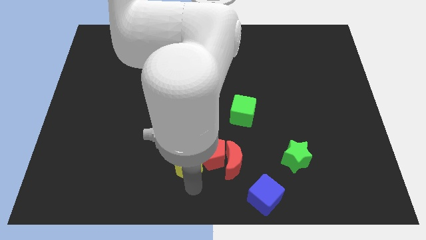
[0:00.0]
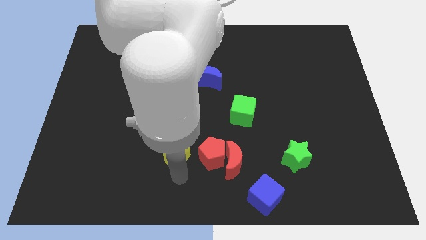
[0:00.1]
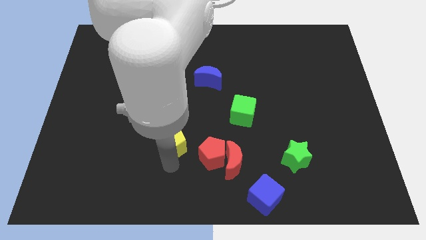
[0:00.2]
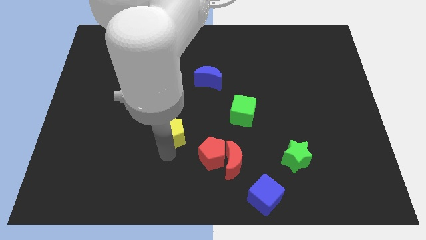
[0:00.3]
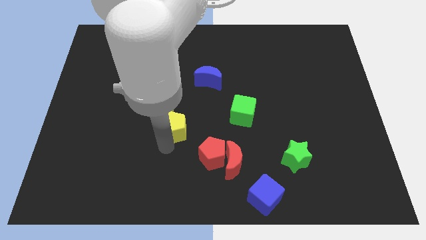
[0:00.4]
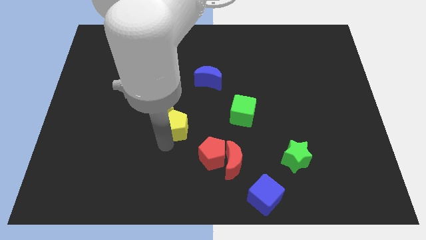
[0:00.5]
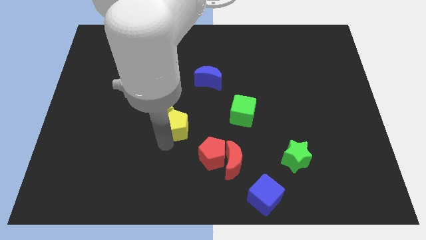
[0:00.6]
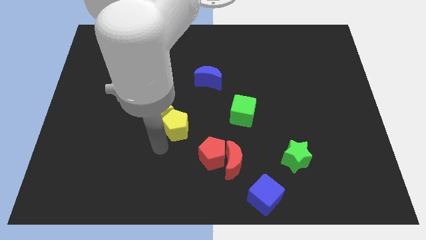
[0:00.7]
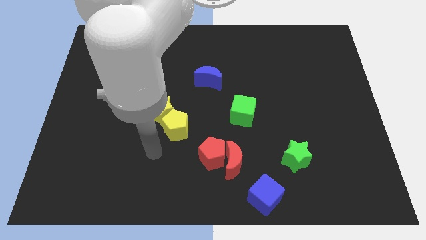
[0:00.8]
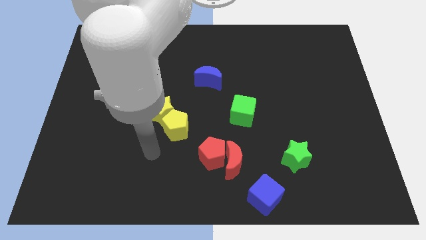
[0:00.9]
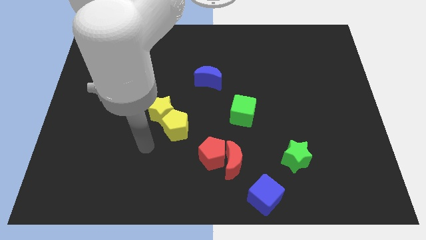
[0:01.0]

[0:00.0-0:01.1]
place yellow pentagon near yellow star

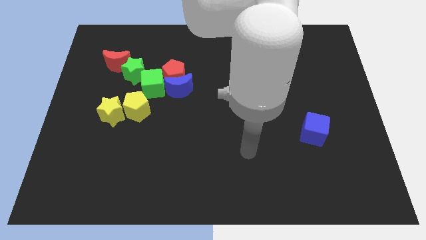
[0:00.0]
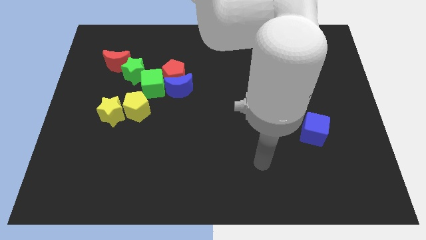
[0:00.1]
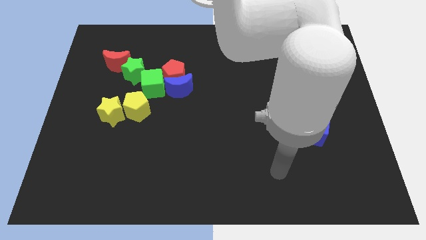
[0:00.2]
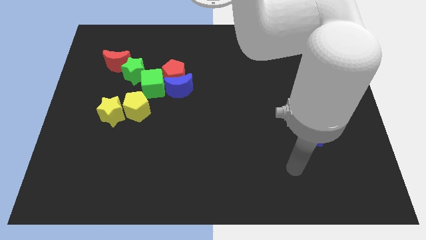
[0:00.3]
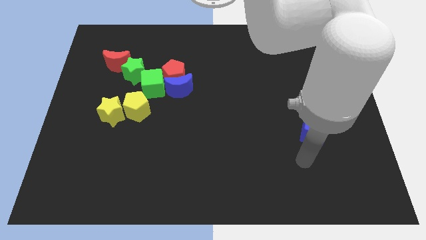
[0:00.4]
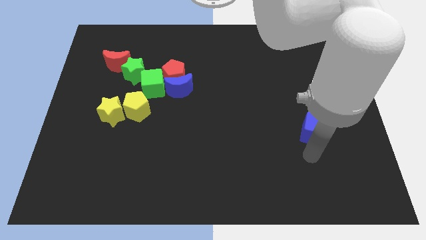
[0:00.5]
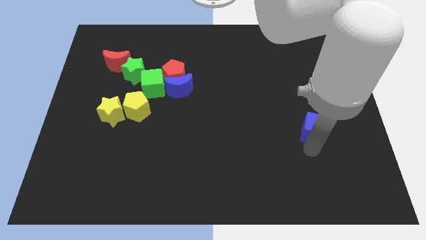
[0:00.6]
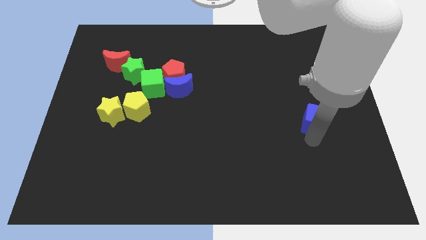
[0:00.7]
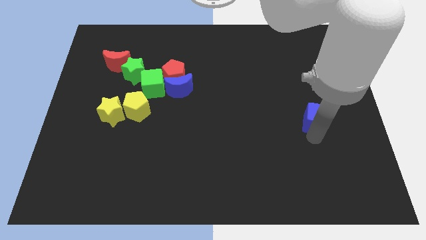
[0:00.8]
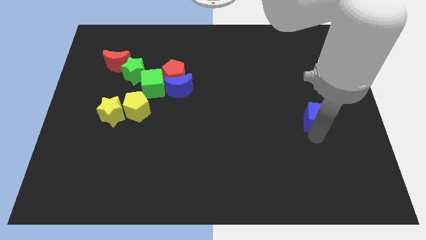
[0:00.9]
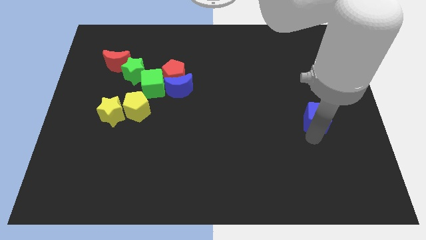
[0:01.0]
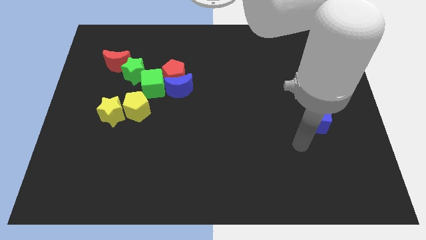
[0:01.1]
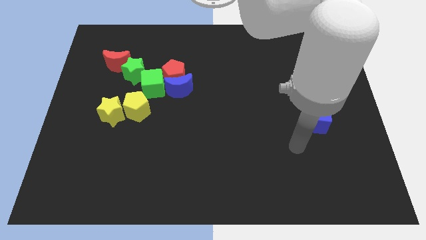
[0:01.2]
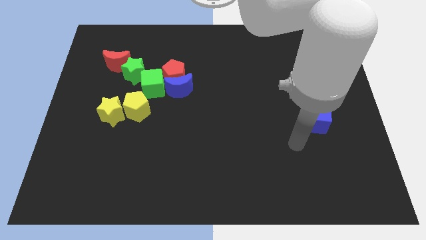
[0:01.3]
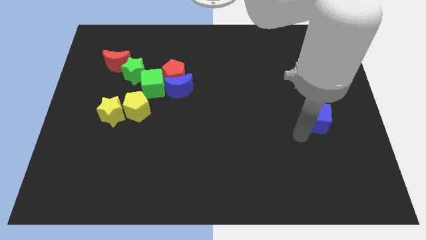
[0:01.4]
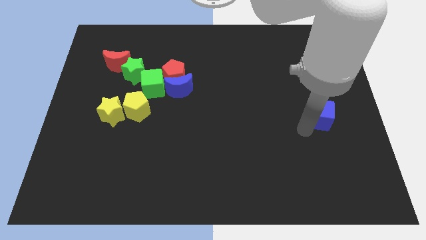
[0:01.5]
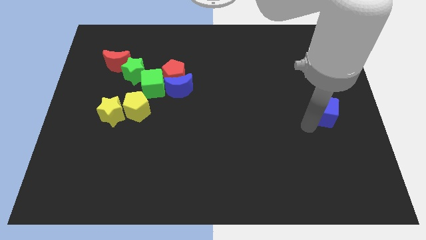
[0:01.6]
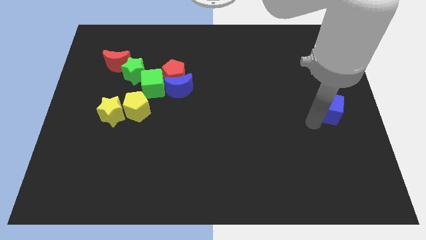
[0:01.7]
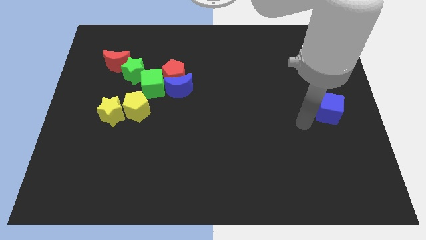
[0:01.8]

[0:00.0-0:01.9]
push the blue cube slightly to the right center of the board

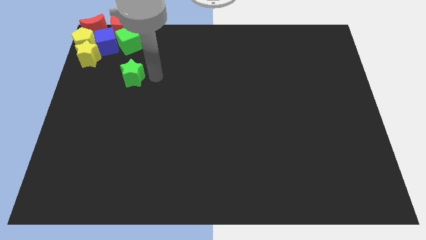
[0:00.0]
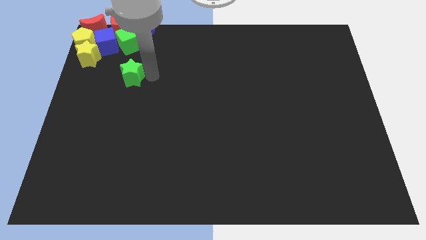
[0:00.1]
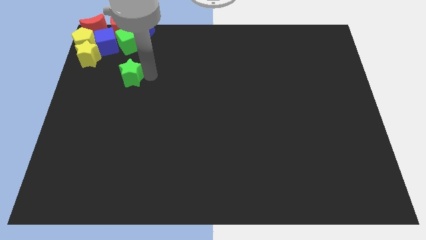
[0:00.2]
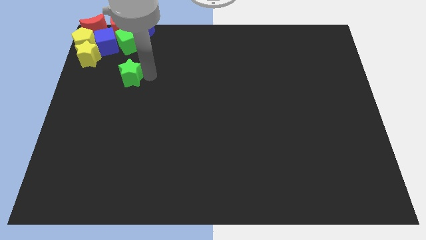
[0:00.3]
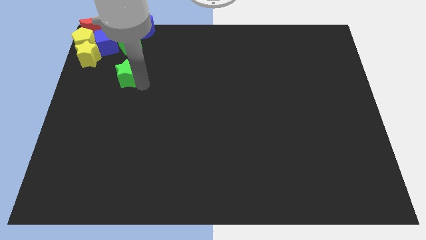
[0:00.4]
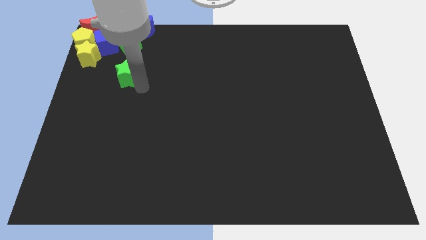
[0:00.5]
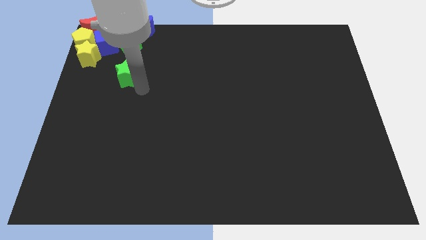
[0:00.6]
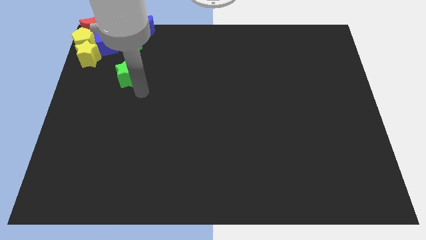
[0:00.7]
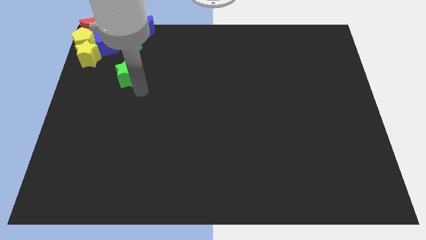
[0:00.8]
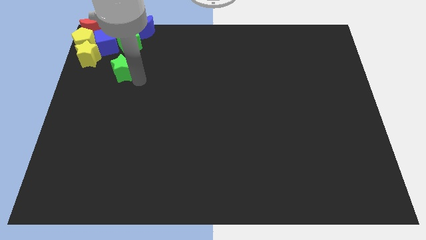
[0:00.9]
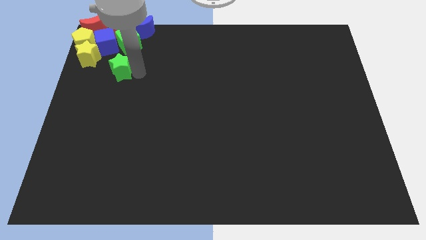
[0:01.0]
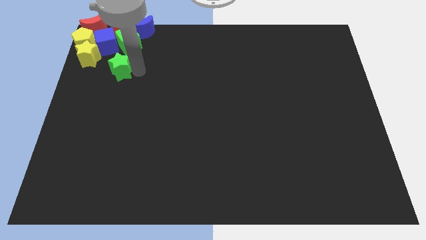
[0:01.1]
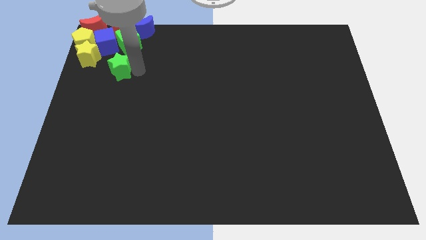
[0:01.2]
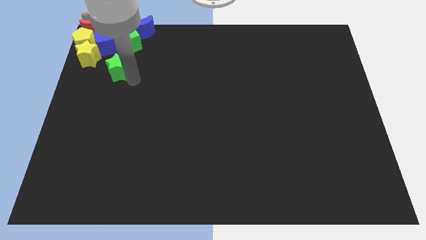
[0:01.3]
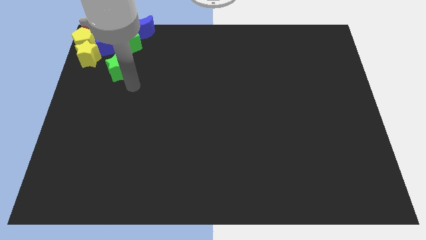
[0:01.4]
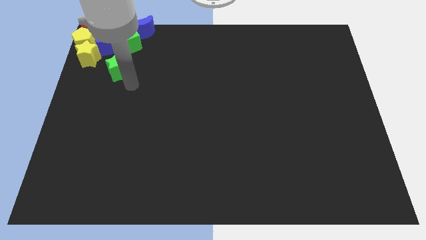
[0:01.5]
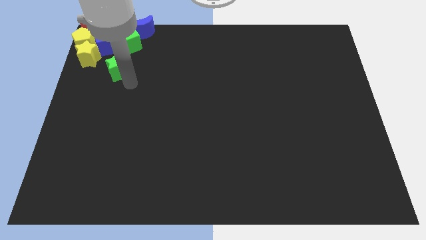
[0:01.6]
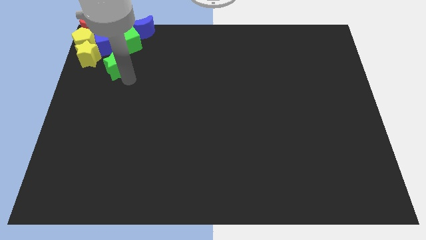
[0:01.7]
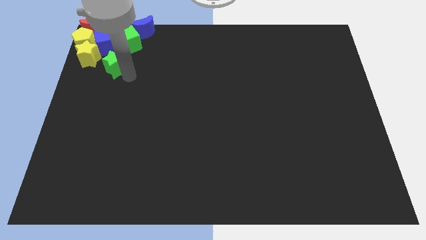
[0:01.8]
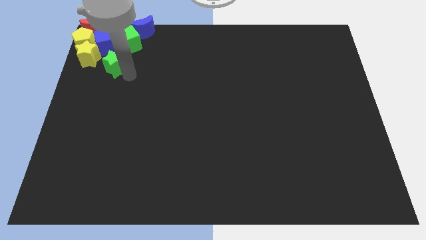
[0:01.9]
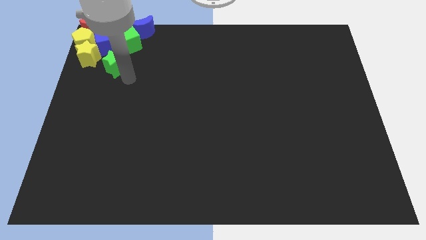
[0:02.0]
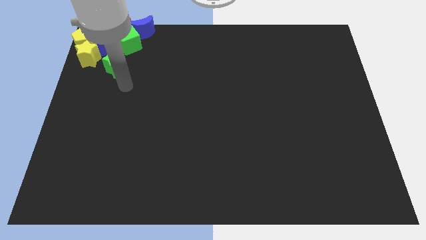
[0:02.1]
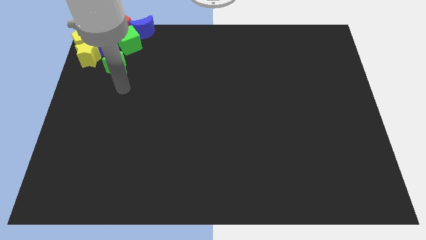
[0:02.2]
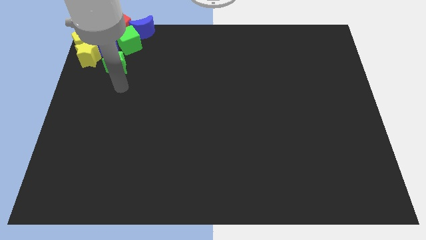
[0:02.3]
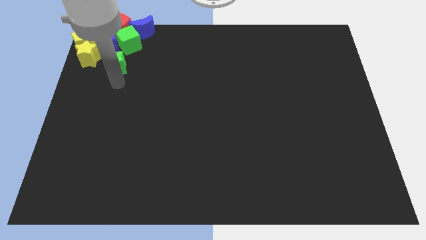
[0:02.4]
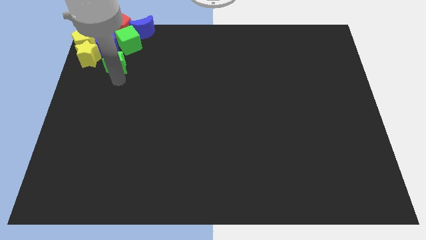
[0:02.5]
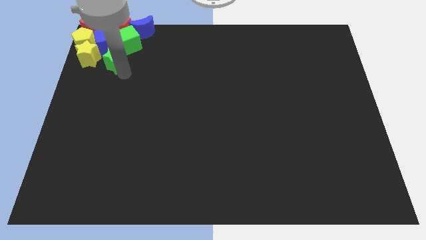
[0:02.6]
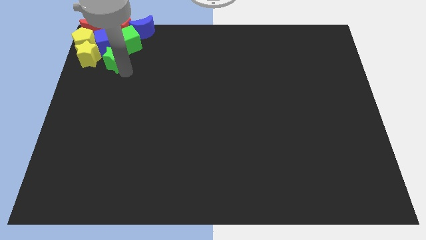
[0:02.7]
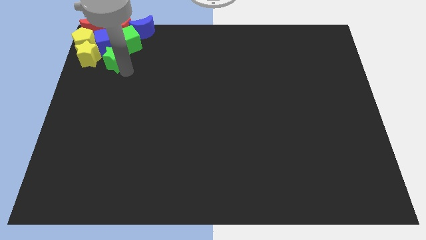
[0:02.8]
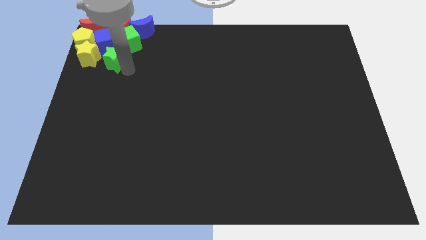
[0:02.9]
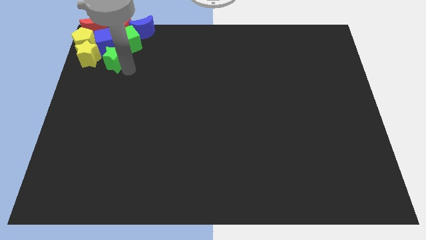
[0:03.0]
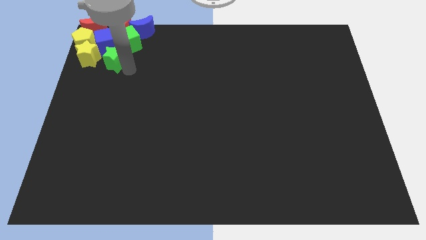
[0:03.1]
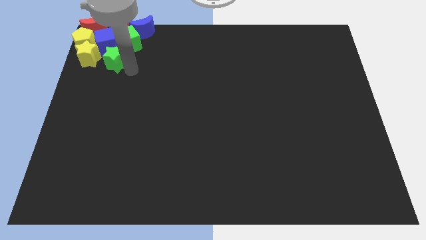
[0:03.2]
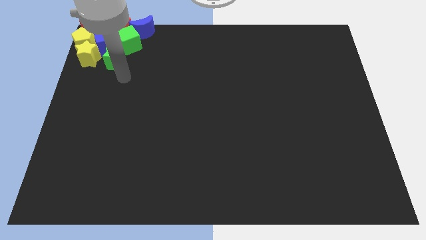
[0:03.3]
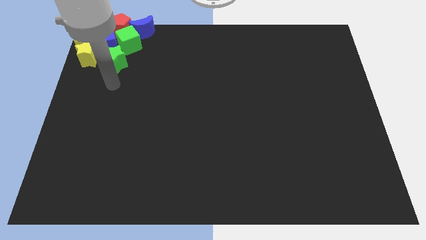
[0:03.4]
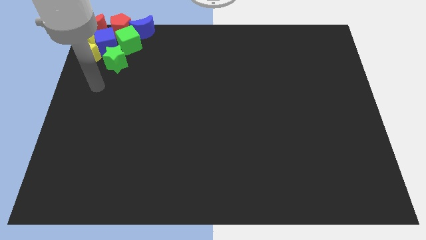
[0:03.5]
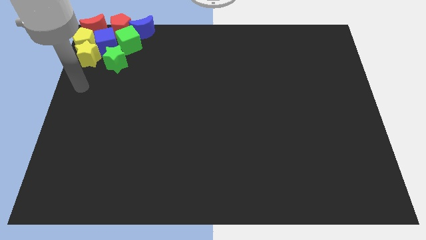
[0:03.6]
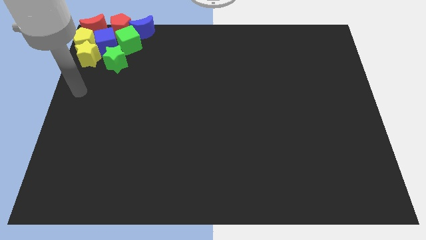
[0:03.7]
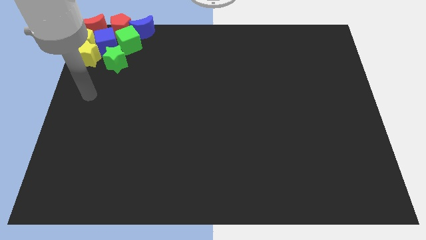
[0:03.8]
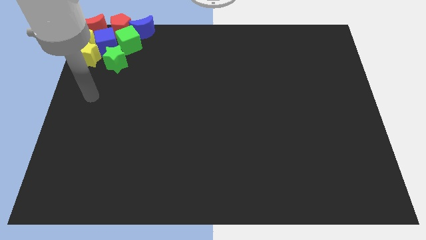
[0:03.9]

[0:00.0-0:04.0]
push the green star right to the yellow star

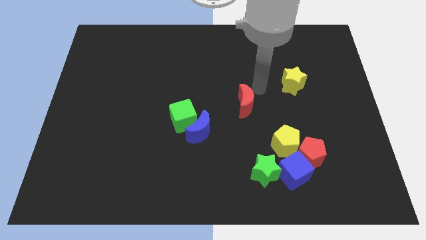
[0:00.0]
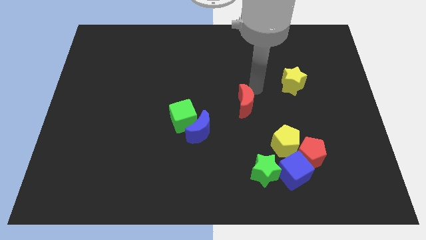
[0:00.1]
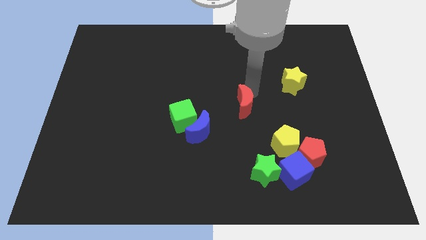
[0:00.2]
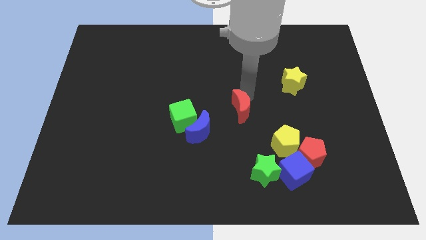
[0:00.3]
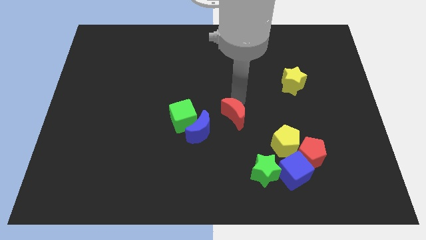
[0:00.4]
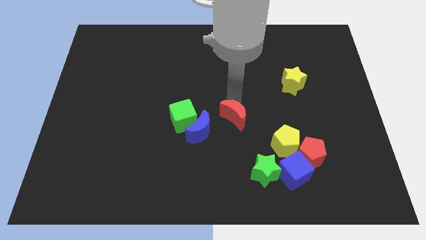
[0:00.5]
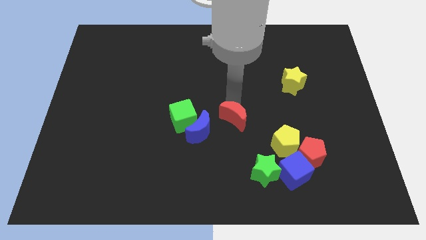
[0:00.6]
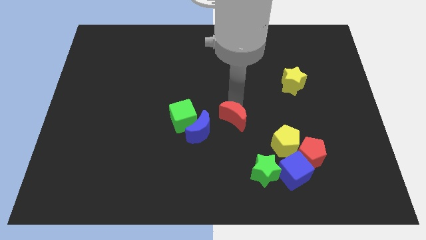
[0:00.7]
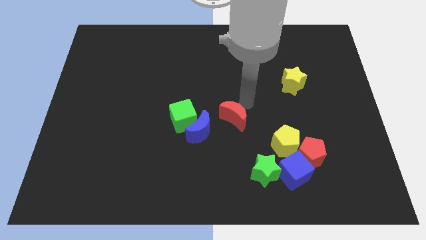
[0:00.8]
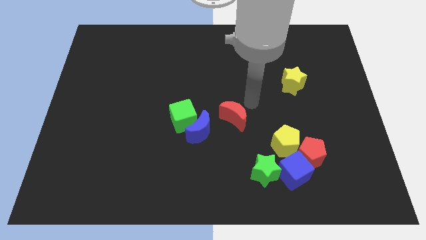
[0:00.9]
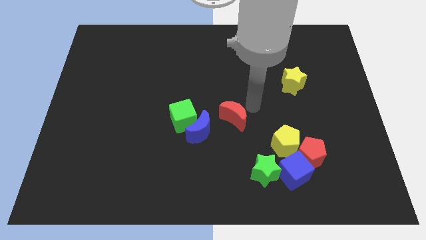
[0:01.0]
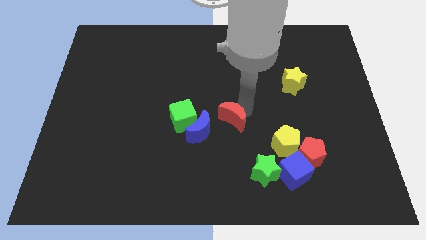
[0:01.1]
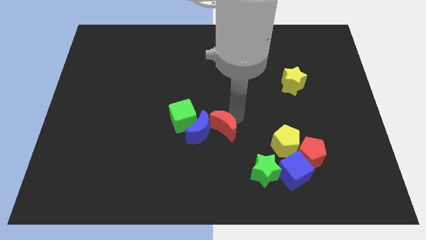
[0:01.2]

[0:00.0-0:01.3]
move the red crescent right to the blue crescent

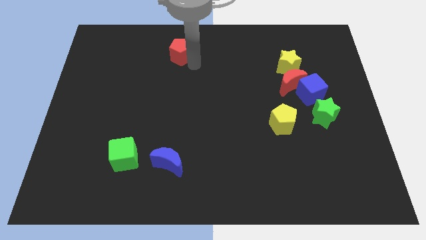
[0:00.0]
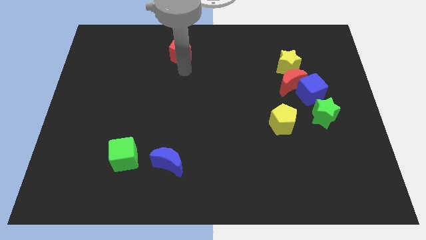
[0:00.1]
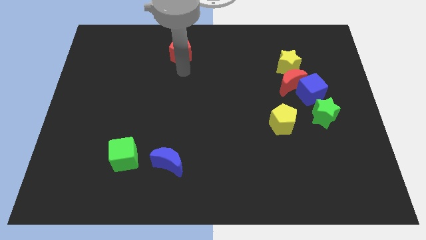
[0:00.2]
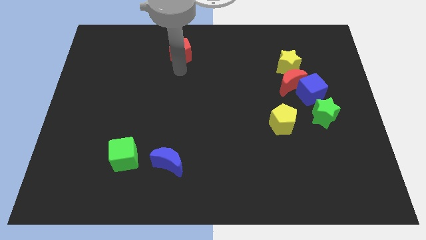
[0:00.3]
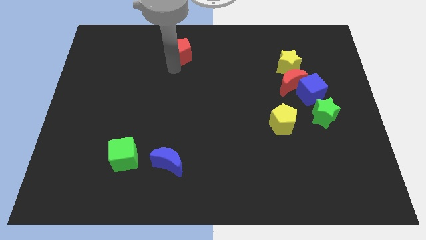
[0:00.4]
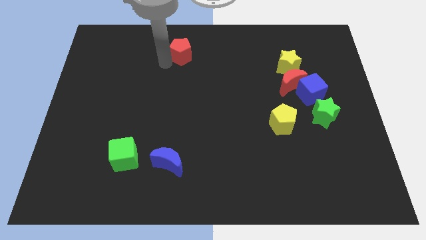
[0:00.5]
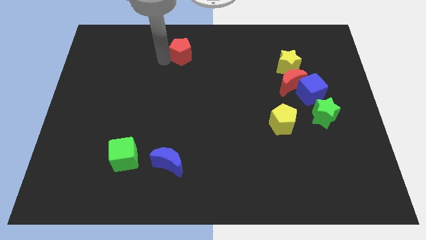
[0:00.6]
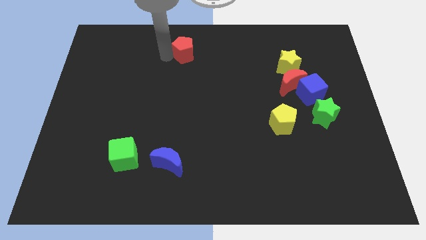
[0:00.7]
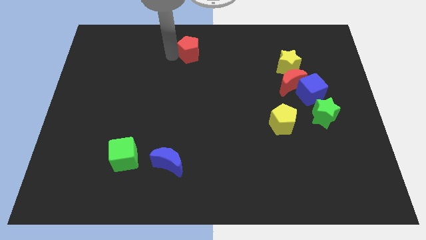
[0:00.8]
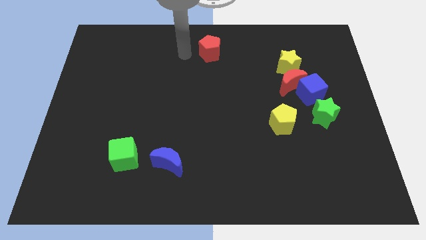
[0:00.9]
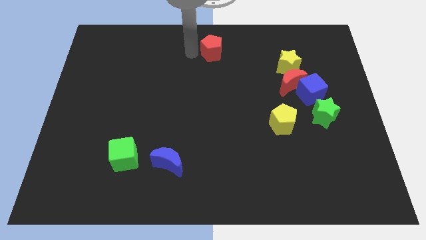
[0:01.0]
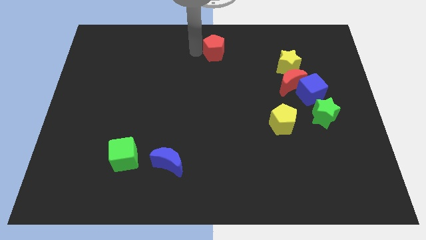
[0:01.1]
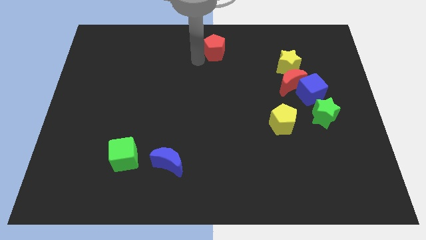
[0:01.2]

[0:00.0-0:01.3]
move red pentagon slightly right
